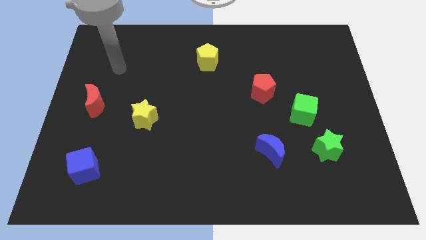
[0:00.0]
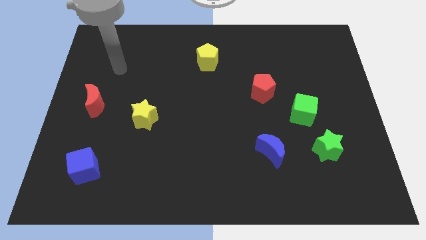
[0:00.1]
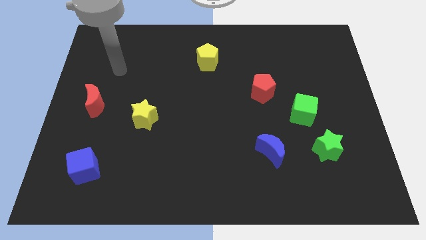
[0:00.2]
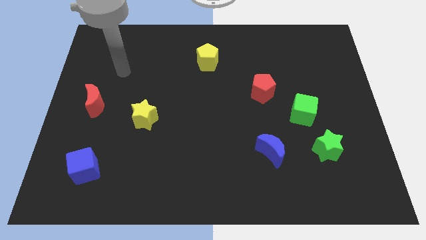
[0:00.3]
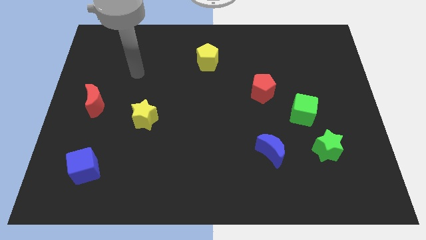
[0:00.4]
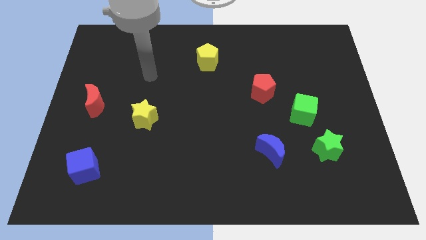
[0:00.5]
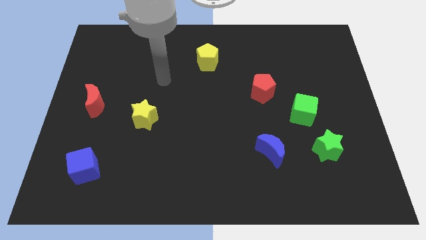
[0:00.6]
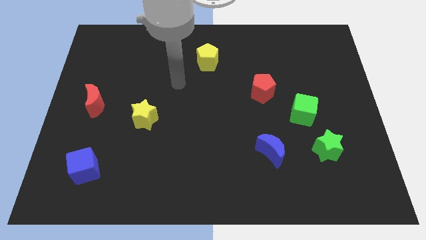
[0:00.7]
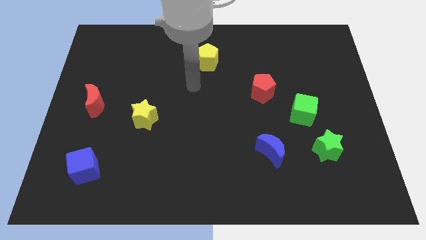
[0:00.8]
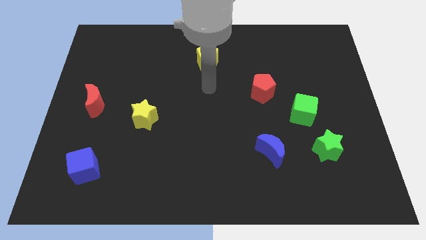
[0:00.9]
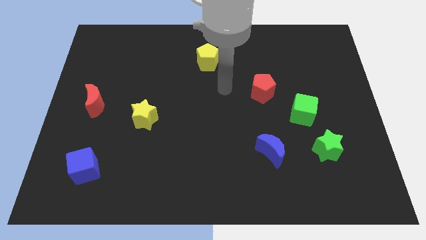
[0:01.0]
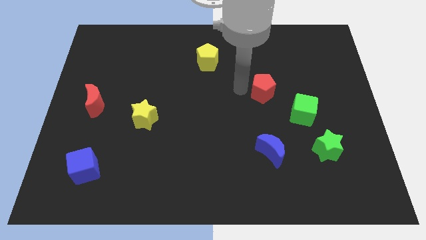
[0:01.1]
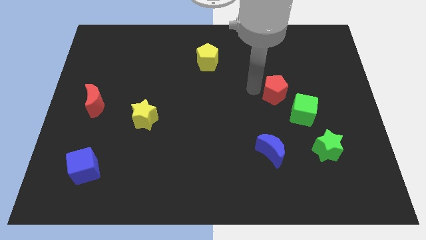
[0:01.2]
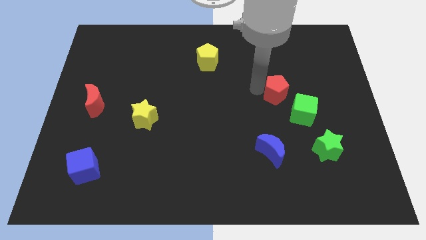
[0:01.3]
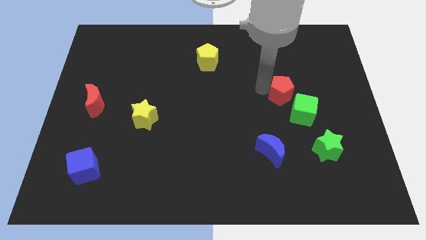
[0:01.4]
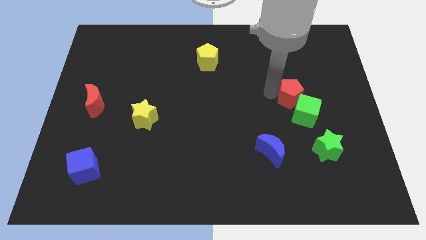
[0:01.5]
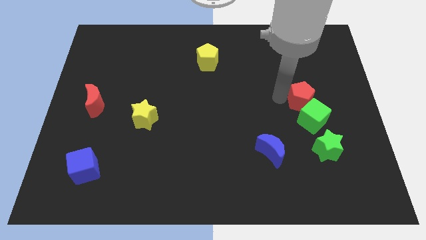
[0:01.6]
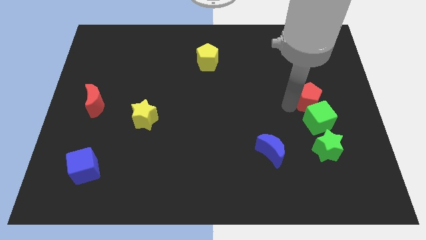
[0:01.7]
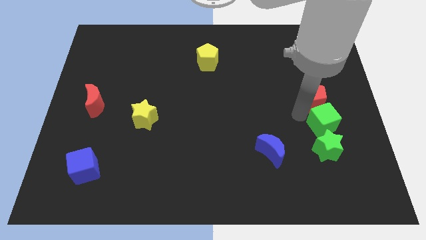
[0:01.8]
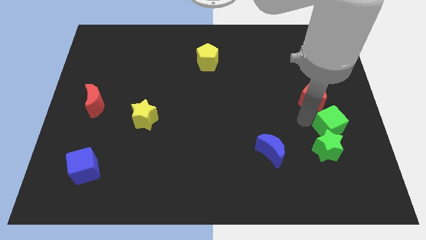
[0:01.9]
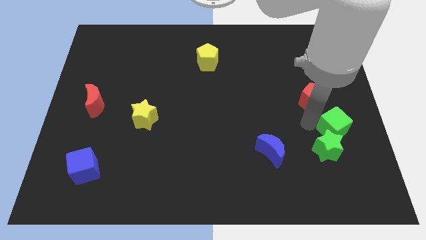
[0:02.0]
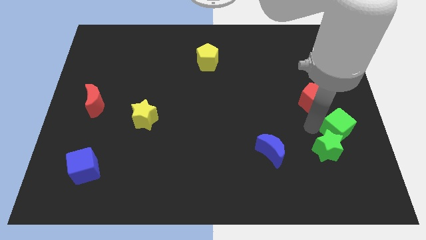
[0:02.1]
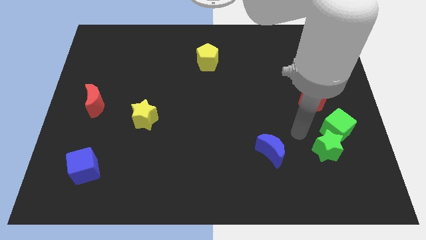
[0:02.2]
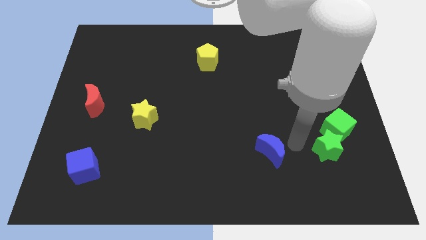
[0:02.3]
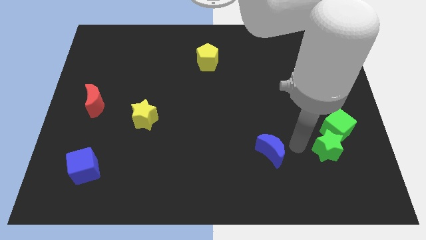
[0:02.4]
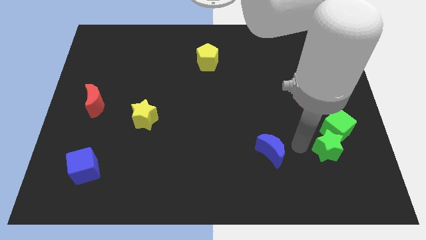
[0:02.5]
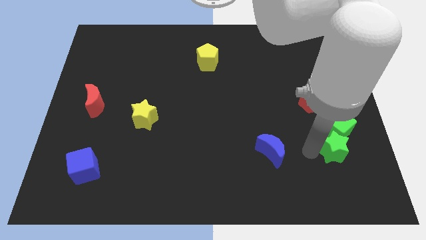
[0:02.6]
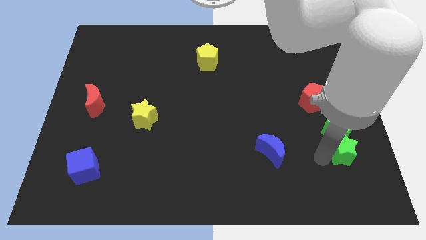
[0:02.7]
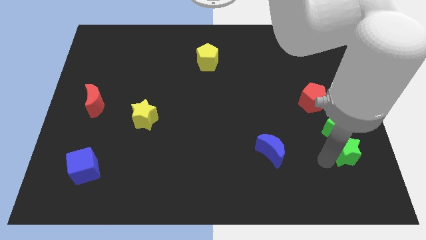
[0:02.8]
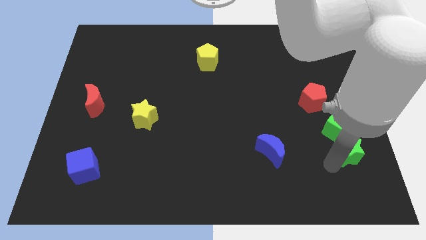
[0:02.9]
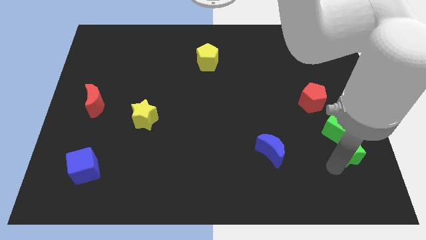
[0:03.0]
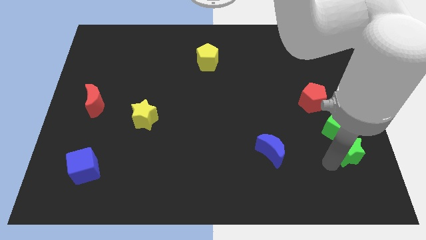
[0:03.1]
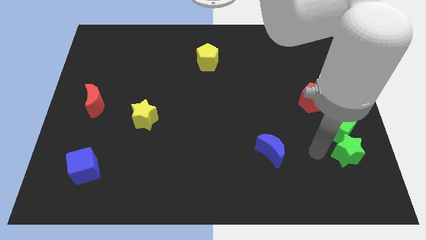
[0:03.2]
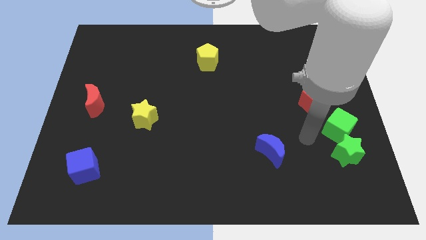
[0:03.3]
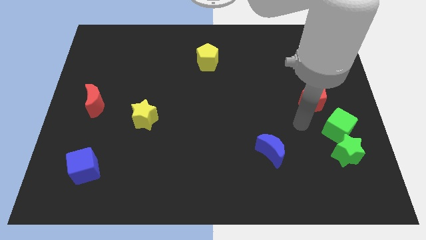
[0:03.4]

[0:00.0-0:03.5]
push the group of blocks downward

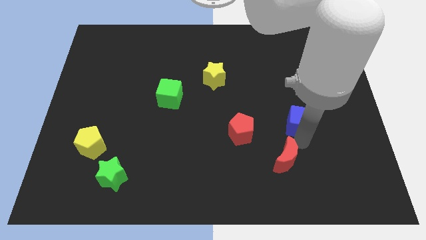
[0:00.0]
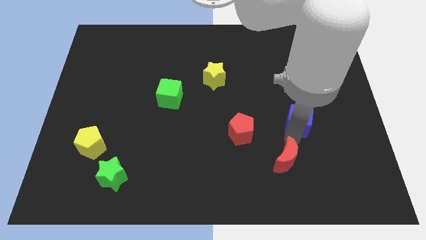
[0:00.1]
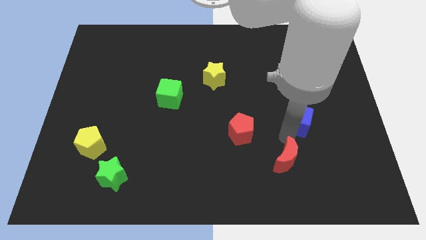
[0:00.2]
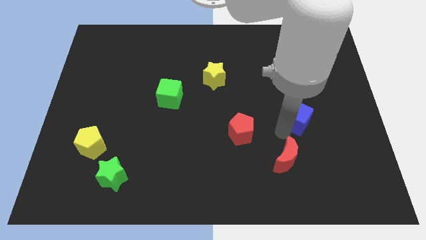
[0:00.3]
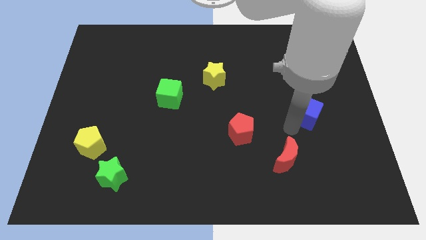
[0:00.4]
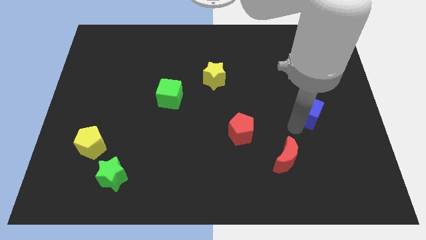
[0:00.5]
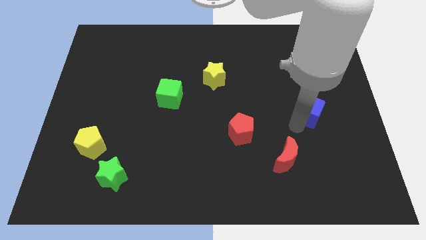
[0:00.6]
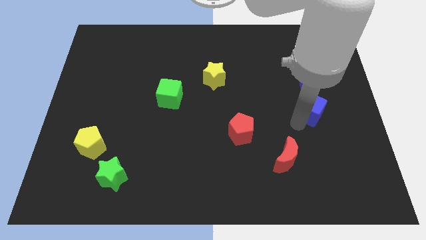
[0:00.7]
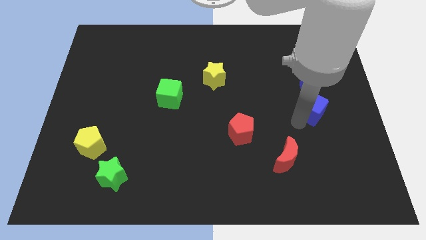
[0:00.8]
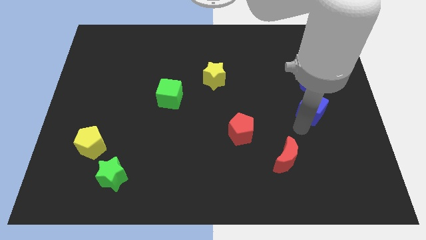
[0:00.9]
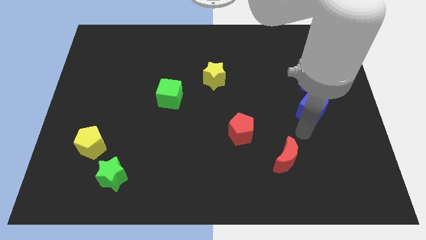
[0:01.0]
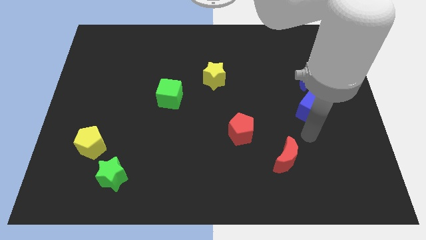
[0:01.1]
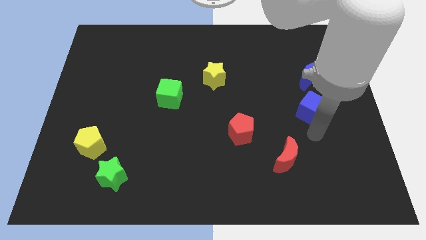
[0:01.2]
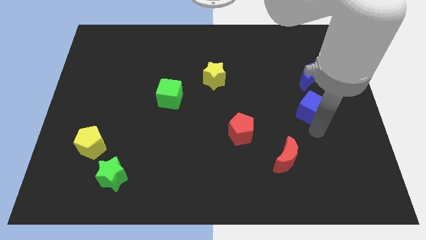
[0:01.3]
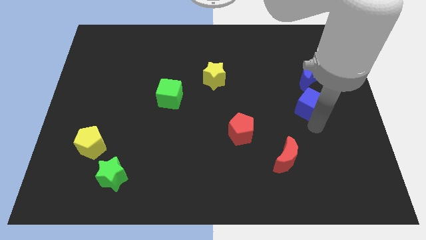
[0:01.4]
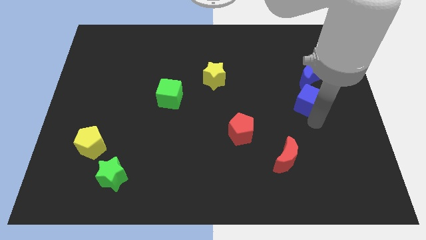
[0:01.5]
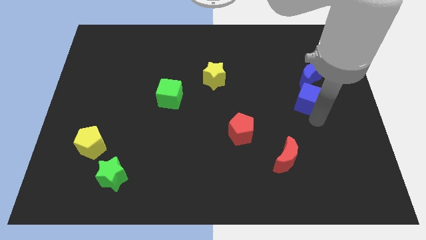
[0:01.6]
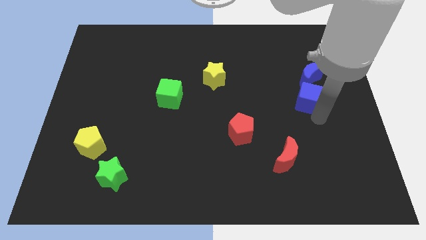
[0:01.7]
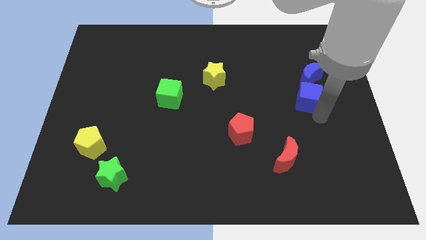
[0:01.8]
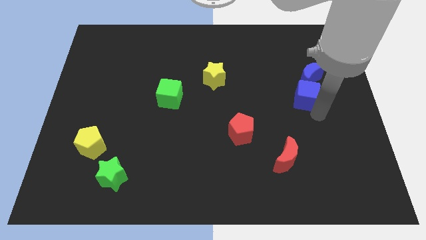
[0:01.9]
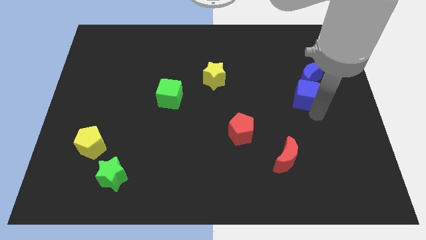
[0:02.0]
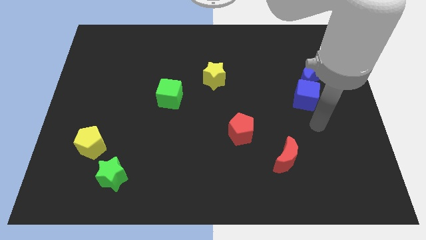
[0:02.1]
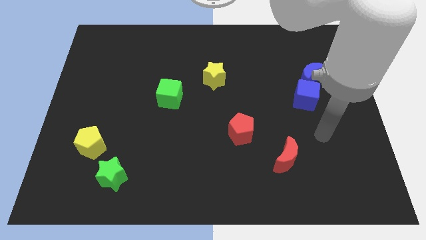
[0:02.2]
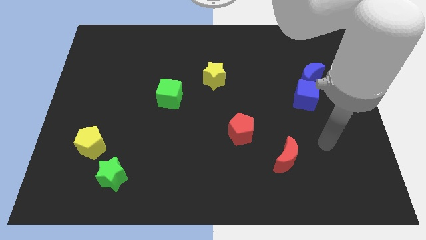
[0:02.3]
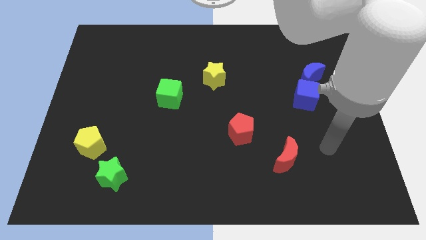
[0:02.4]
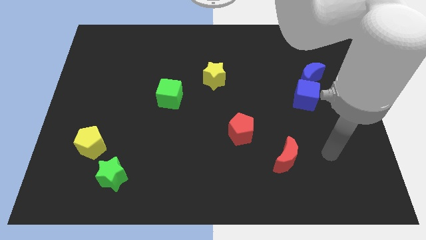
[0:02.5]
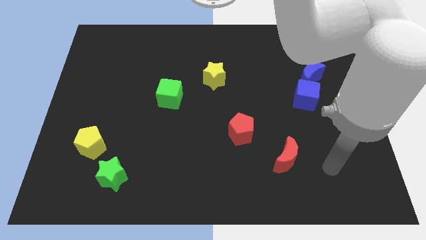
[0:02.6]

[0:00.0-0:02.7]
put the blue cube at the bottom of the blue moon

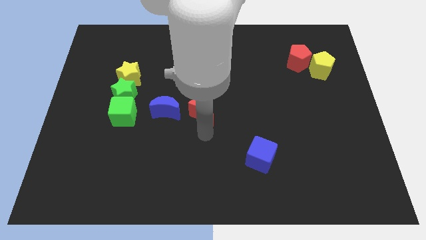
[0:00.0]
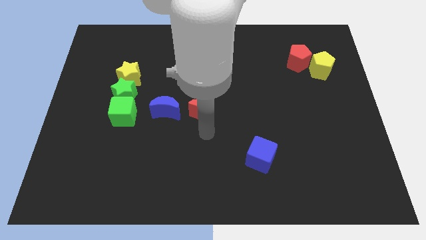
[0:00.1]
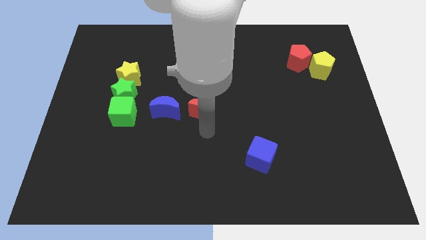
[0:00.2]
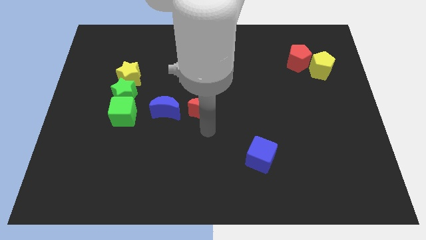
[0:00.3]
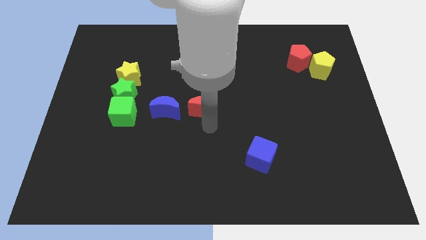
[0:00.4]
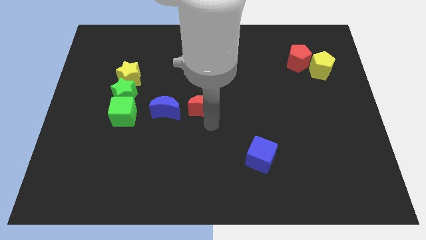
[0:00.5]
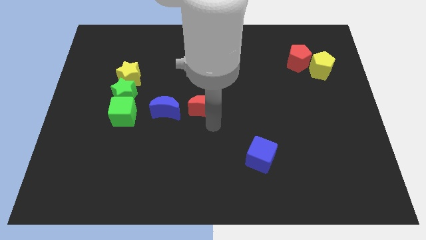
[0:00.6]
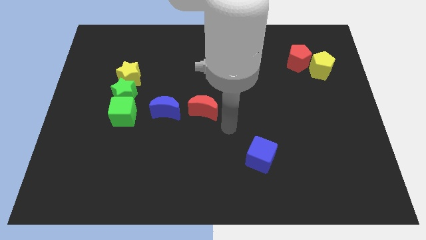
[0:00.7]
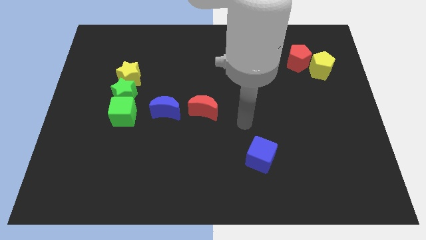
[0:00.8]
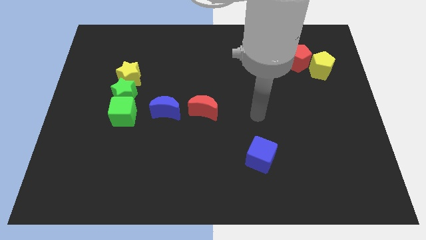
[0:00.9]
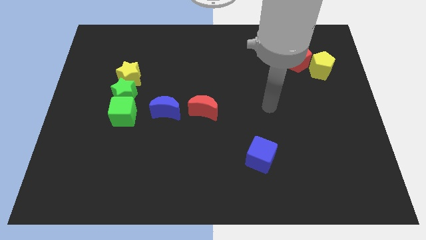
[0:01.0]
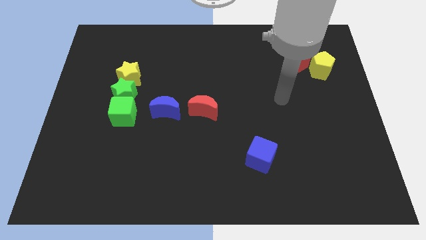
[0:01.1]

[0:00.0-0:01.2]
move red crescent slightly to the right of blue crescent

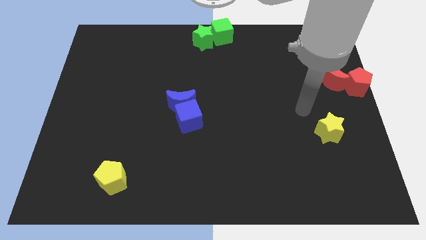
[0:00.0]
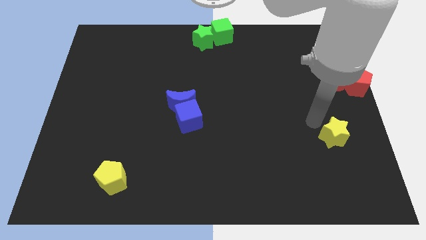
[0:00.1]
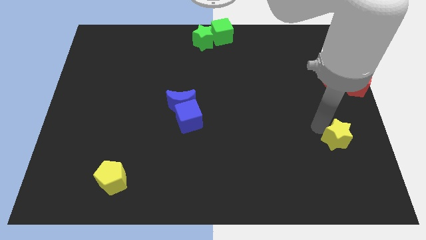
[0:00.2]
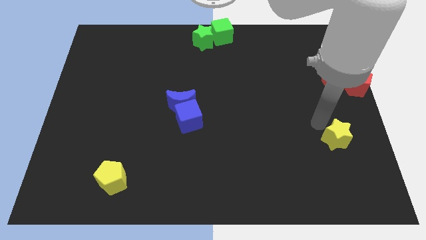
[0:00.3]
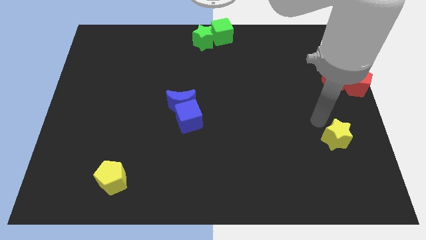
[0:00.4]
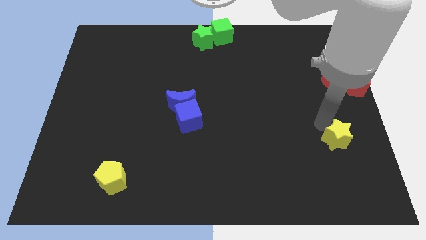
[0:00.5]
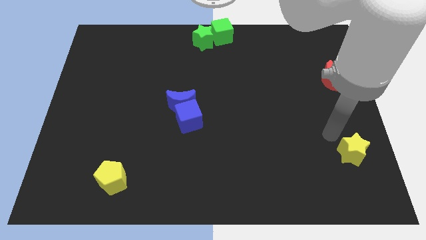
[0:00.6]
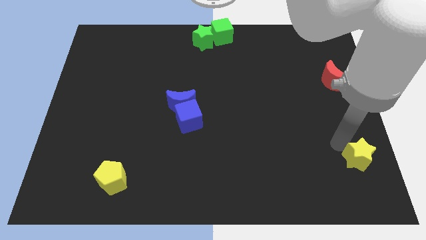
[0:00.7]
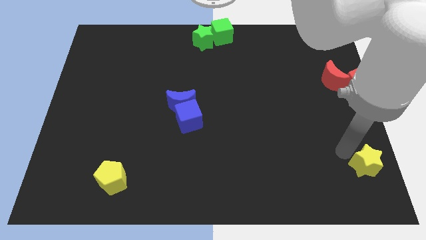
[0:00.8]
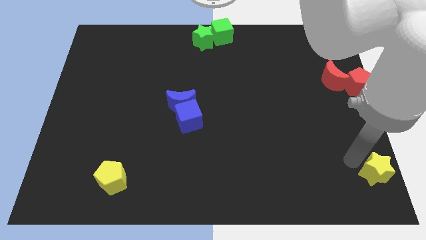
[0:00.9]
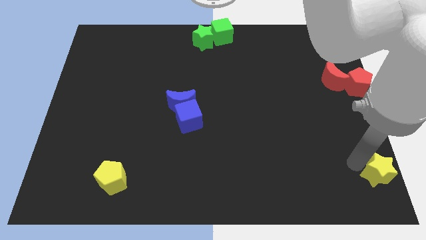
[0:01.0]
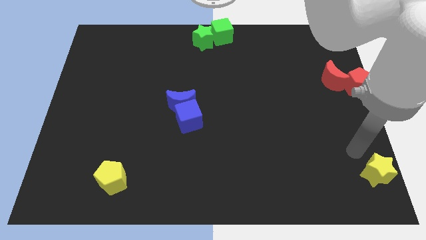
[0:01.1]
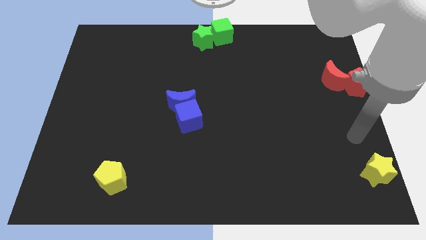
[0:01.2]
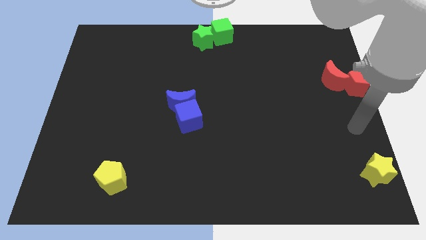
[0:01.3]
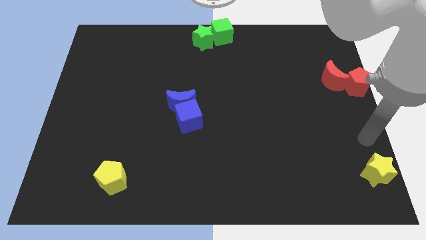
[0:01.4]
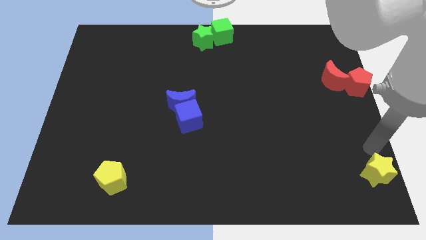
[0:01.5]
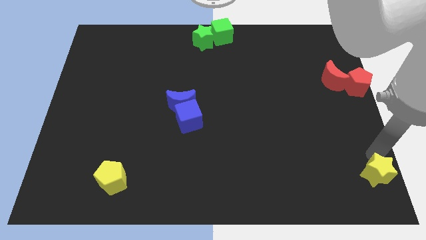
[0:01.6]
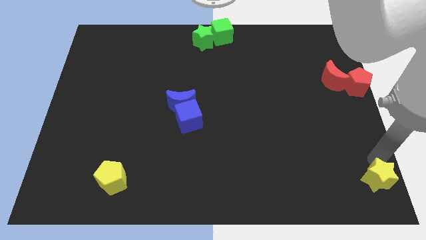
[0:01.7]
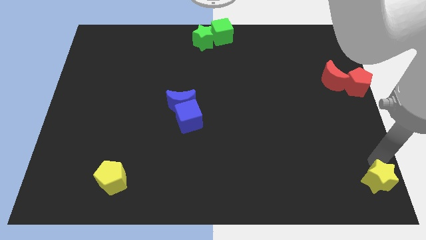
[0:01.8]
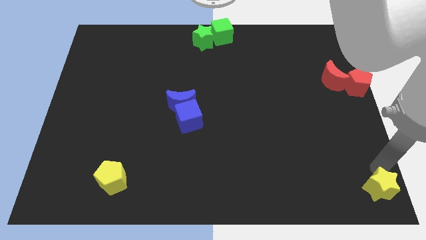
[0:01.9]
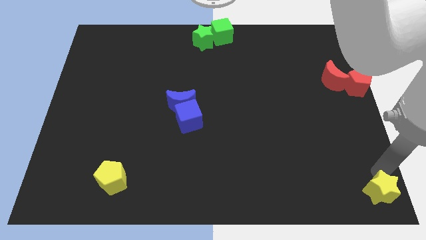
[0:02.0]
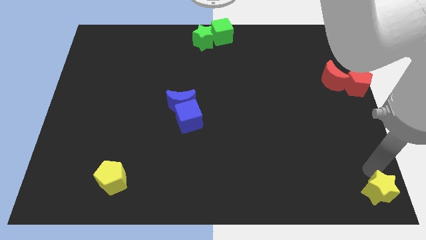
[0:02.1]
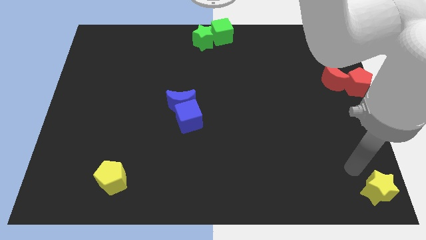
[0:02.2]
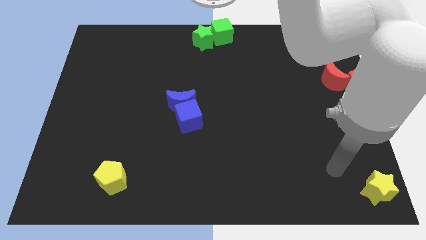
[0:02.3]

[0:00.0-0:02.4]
push the yellow star to the bottom right
